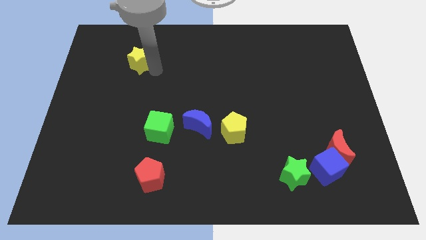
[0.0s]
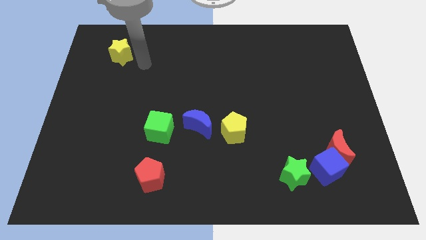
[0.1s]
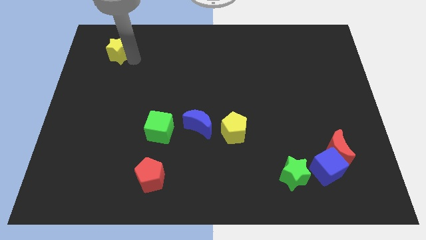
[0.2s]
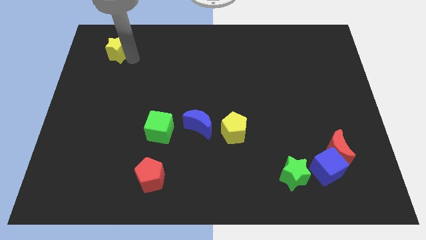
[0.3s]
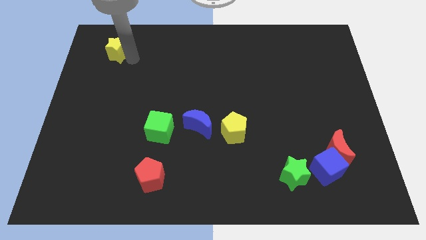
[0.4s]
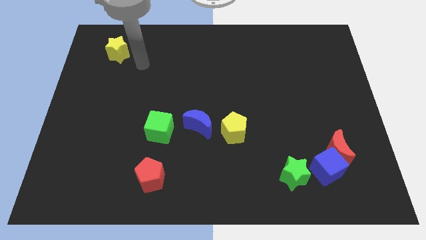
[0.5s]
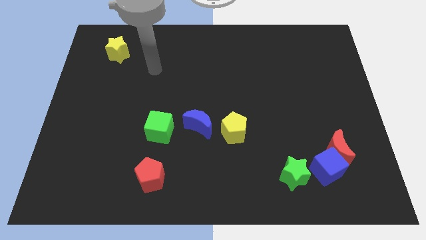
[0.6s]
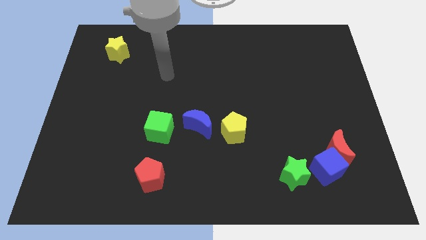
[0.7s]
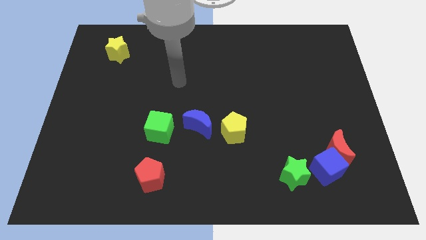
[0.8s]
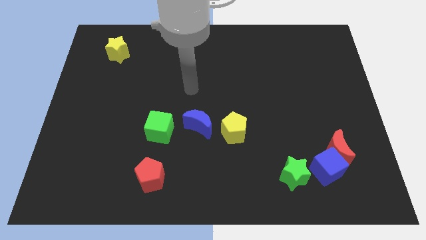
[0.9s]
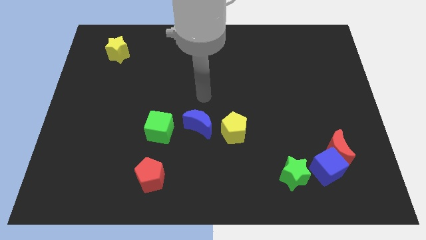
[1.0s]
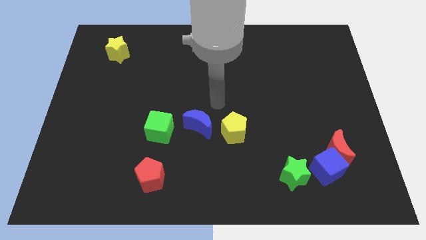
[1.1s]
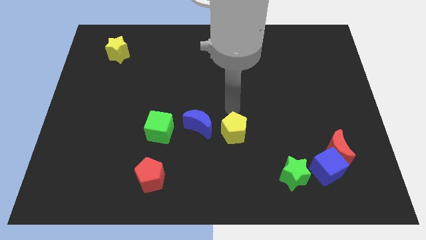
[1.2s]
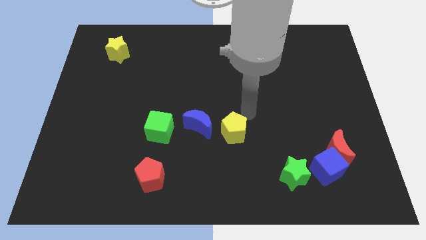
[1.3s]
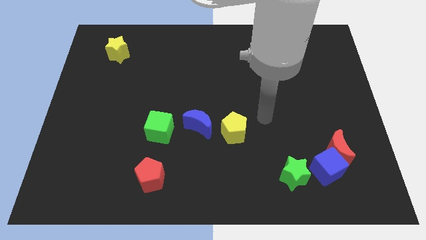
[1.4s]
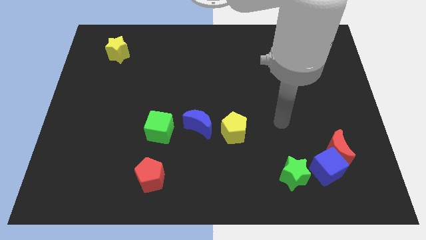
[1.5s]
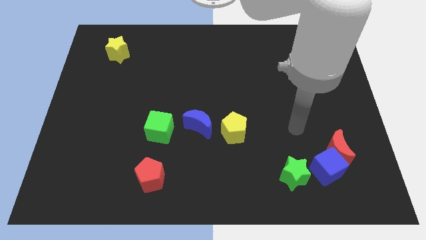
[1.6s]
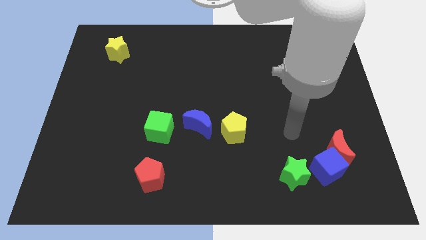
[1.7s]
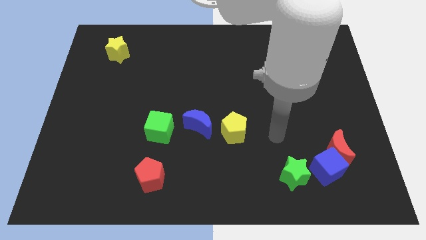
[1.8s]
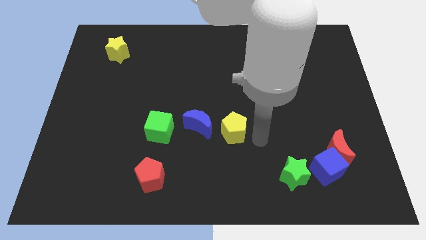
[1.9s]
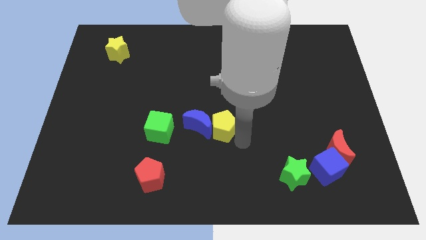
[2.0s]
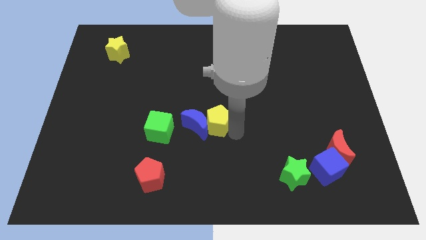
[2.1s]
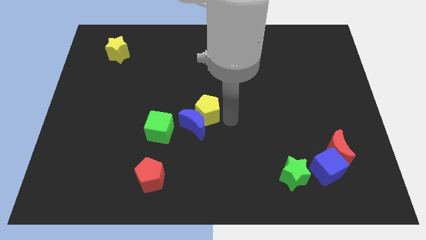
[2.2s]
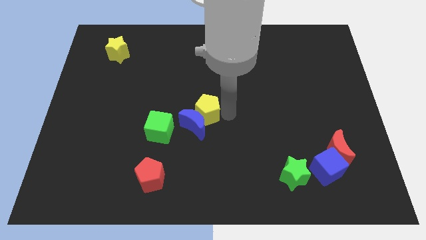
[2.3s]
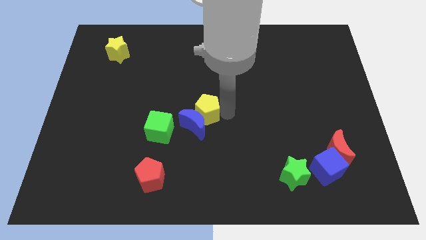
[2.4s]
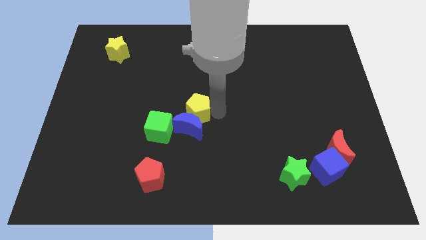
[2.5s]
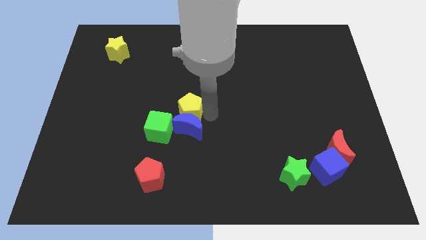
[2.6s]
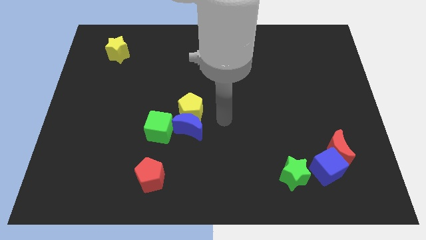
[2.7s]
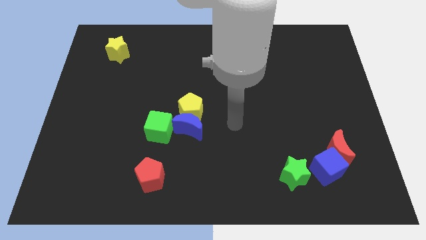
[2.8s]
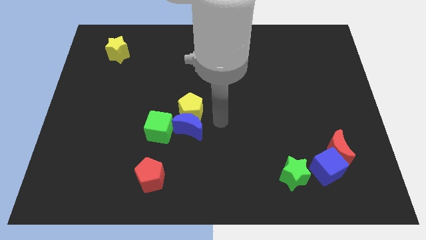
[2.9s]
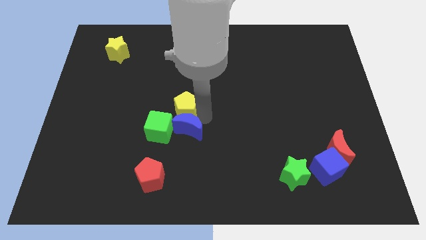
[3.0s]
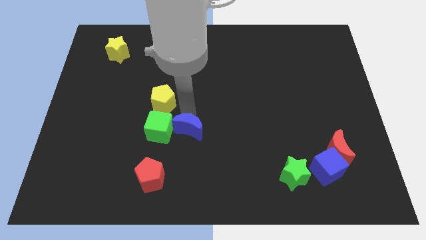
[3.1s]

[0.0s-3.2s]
place the yellow pentagon to the top of the green cube

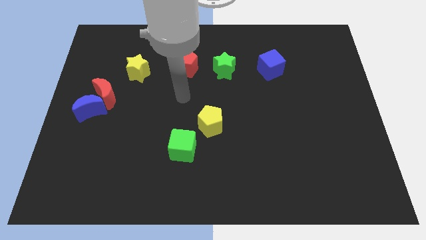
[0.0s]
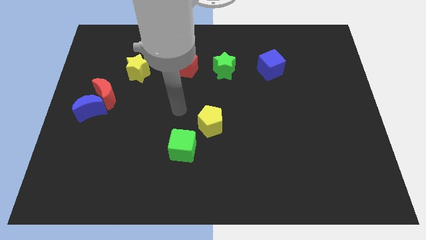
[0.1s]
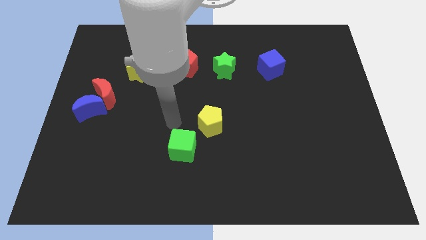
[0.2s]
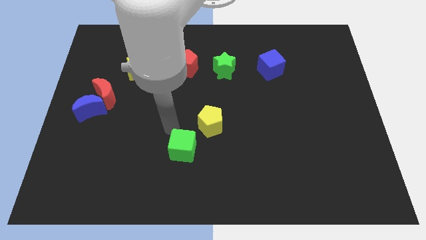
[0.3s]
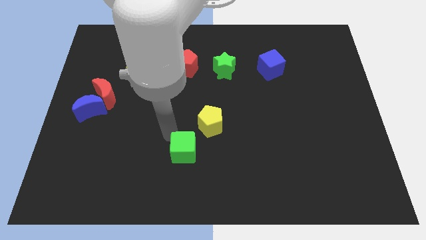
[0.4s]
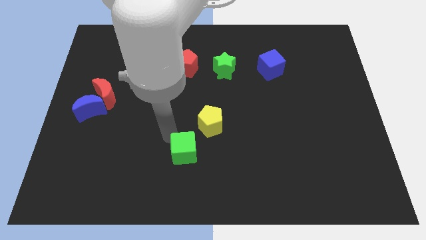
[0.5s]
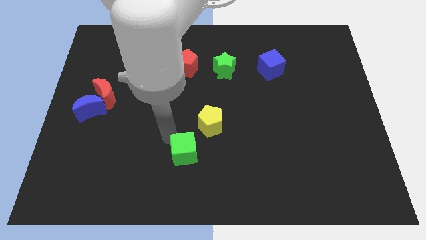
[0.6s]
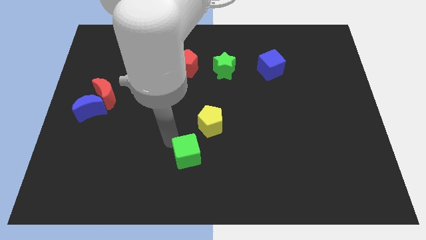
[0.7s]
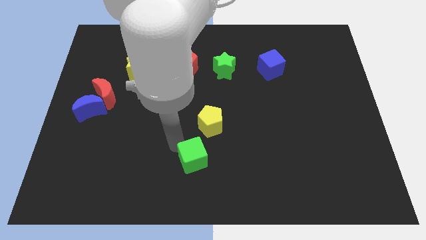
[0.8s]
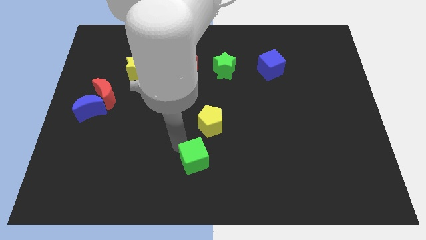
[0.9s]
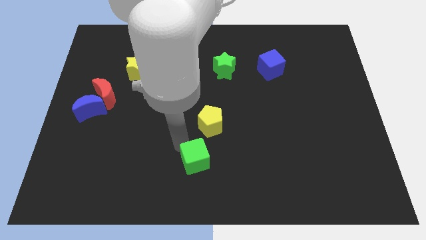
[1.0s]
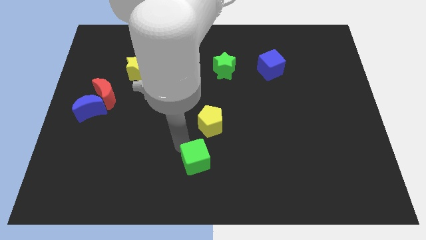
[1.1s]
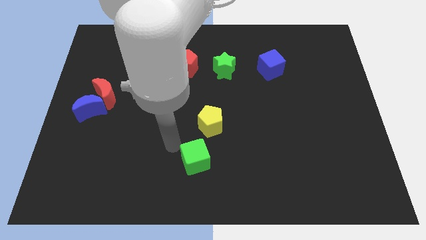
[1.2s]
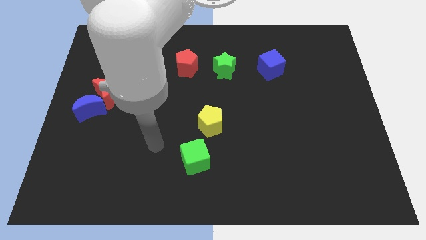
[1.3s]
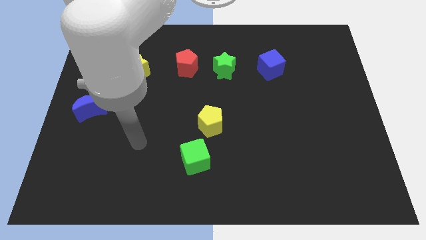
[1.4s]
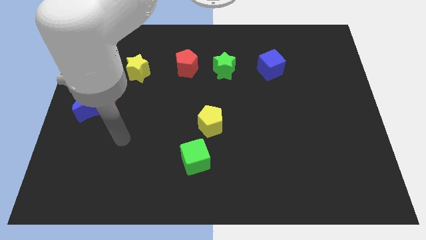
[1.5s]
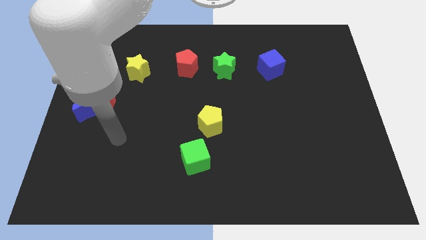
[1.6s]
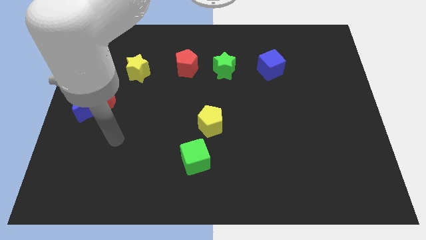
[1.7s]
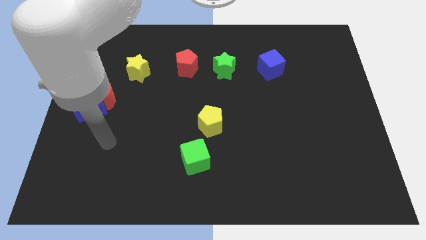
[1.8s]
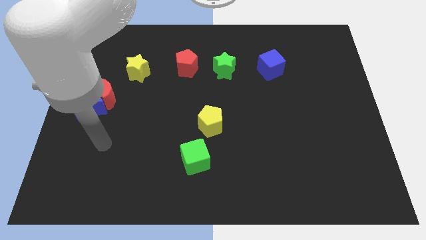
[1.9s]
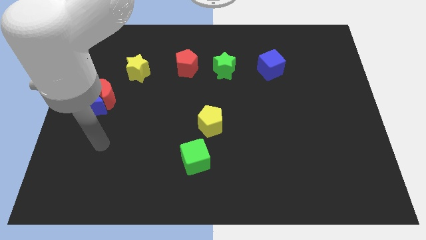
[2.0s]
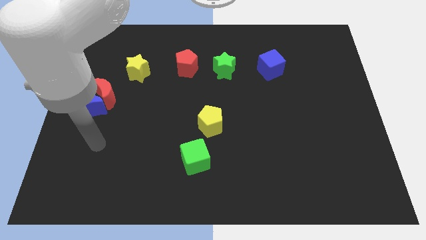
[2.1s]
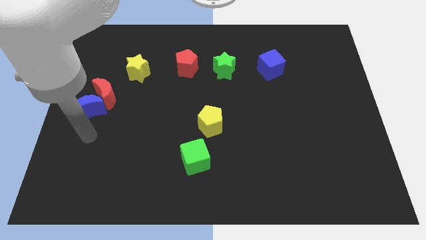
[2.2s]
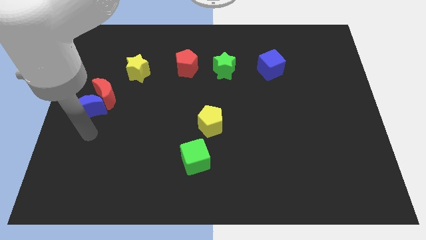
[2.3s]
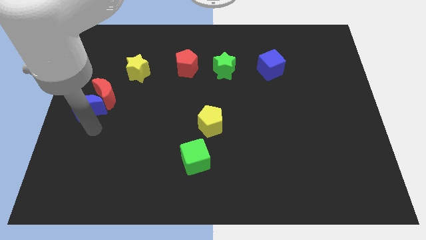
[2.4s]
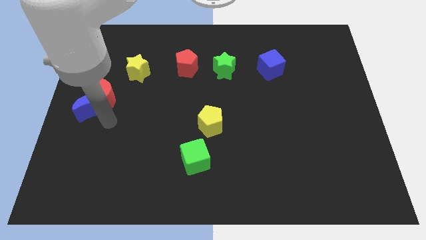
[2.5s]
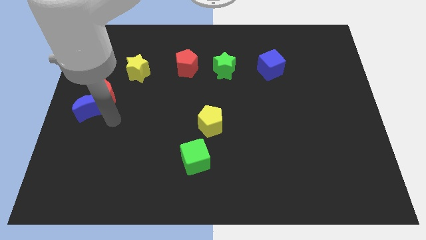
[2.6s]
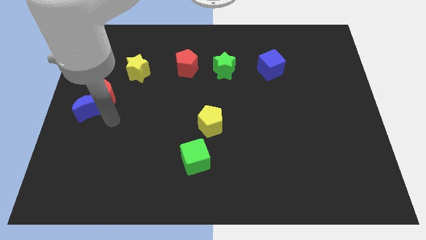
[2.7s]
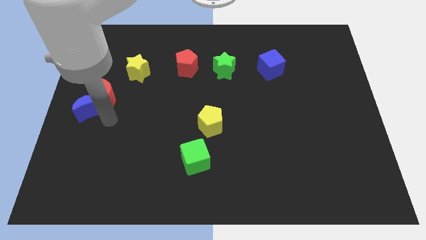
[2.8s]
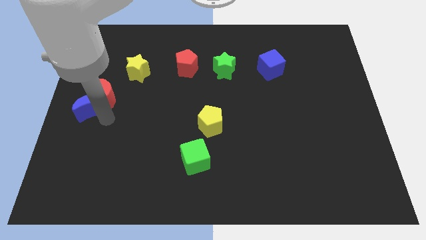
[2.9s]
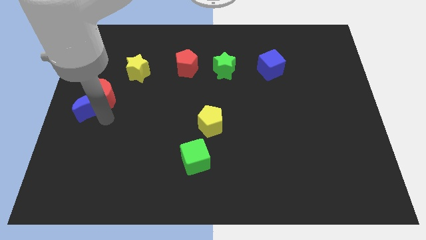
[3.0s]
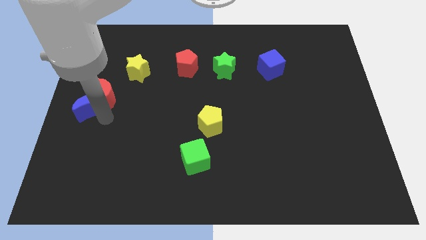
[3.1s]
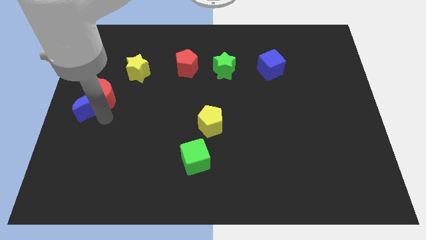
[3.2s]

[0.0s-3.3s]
move the green cube below the yellow pentagon

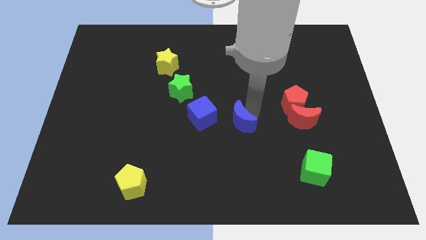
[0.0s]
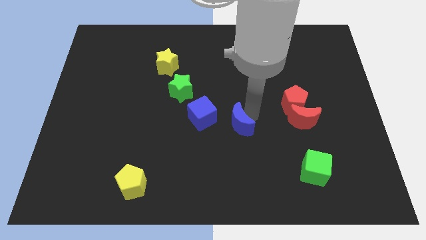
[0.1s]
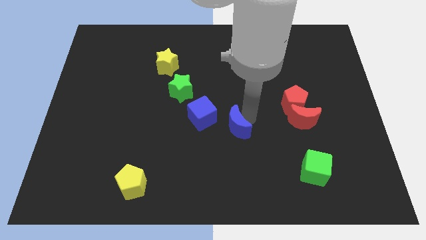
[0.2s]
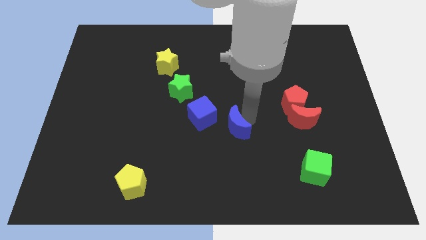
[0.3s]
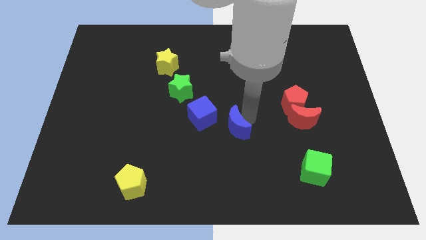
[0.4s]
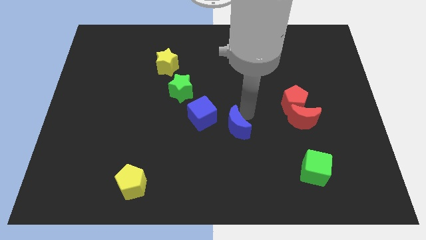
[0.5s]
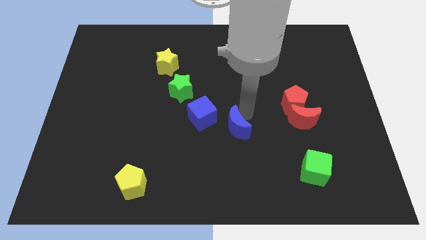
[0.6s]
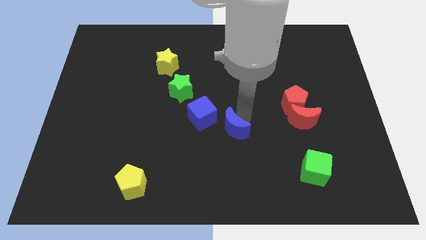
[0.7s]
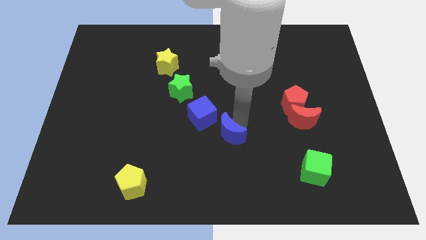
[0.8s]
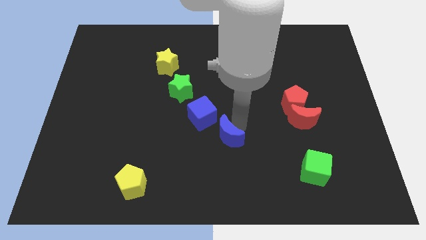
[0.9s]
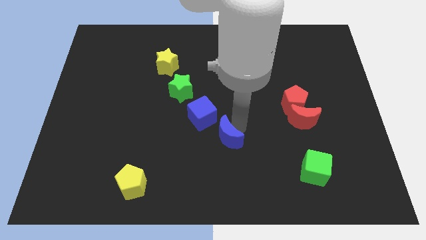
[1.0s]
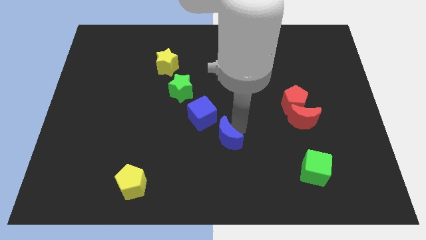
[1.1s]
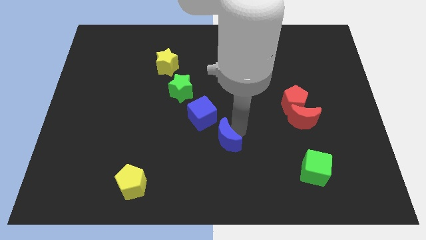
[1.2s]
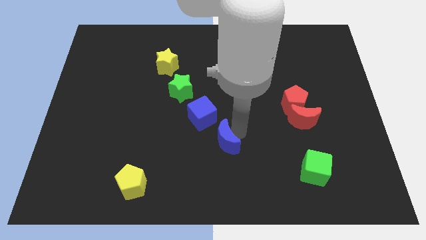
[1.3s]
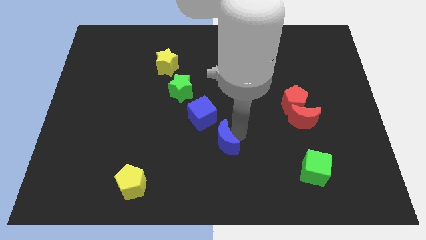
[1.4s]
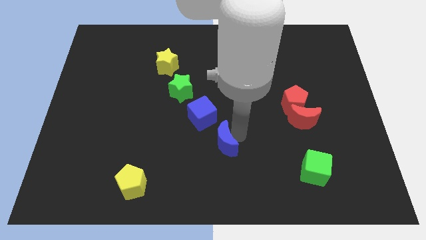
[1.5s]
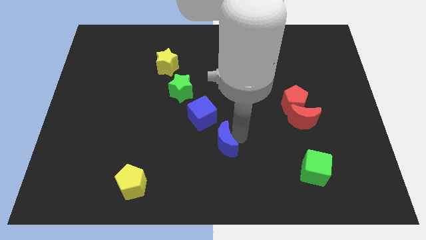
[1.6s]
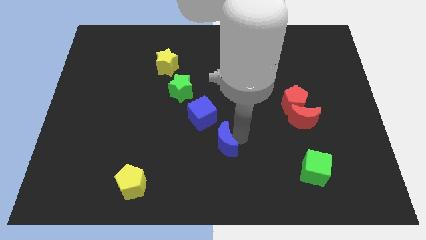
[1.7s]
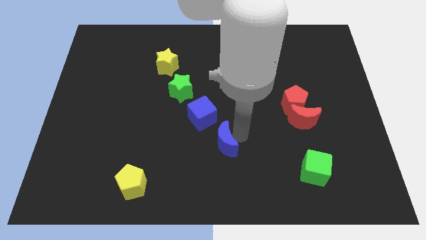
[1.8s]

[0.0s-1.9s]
move the blue moon to the bottom side of the blue cube

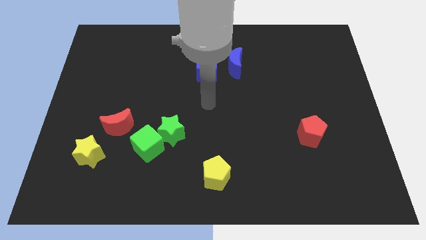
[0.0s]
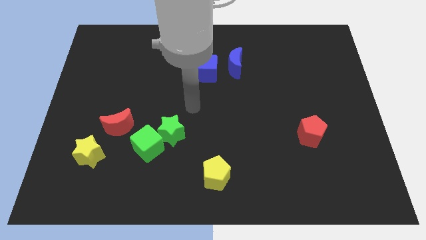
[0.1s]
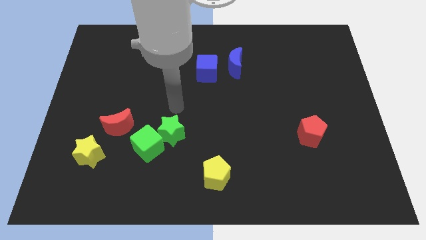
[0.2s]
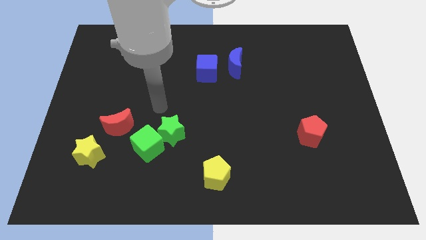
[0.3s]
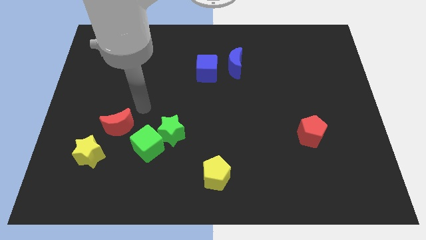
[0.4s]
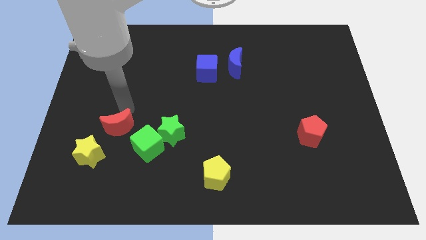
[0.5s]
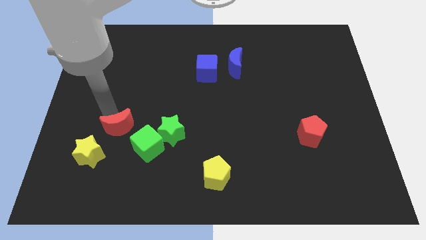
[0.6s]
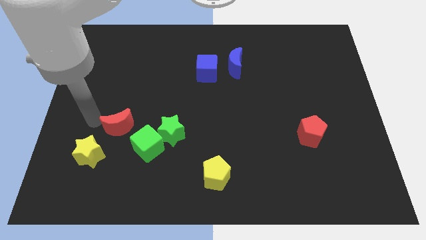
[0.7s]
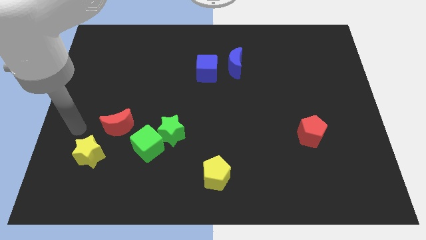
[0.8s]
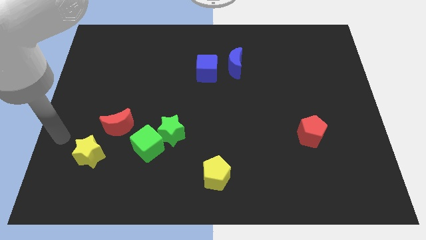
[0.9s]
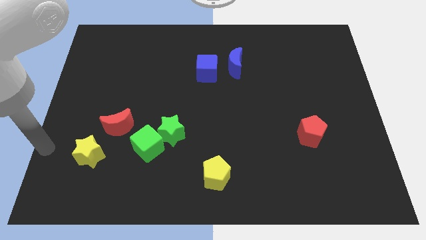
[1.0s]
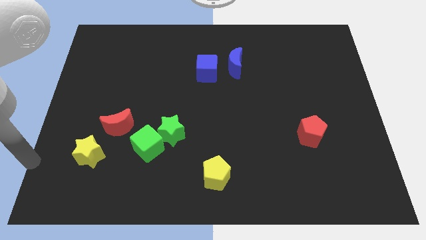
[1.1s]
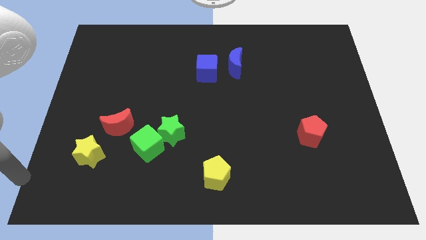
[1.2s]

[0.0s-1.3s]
place your hand at left side of the yellow star
